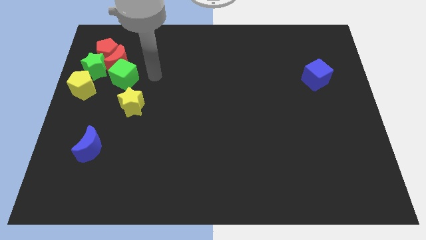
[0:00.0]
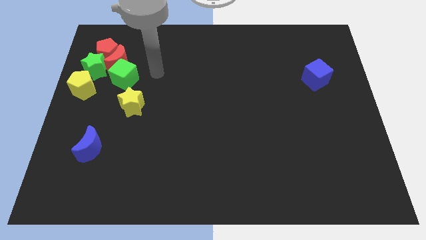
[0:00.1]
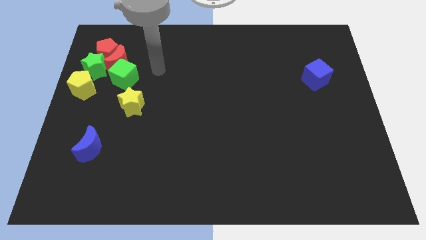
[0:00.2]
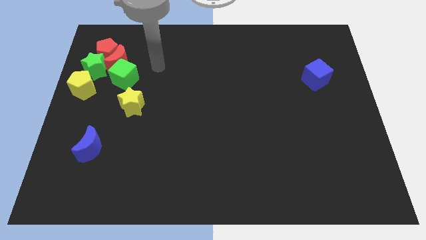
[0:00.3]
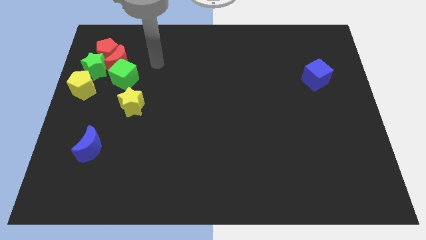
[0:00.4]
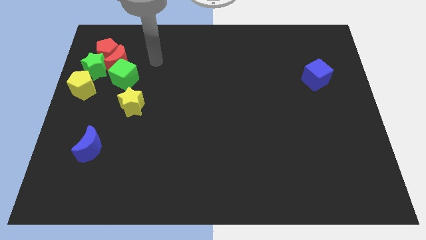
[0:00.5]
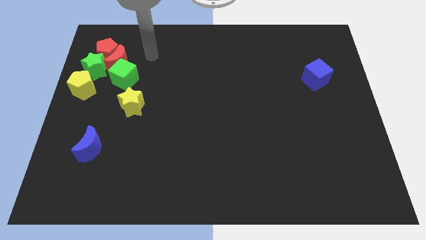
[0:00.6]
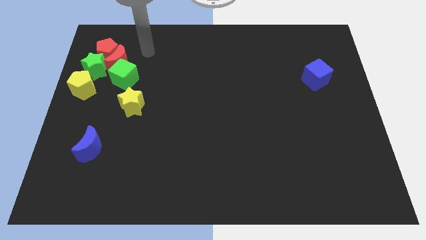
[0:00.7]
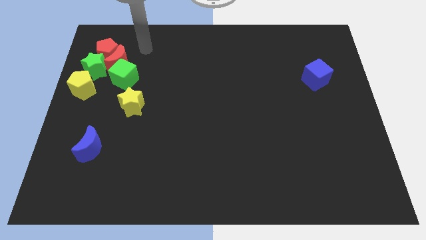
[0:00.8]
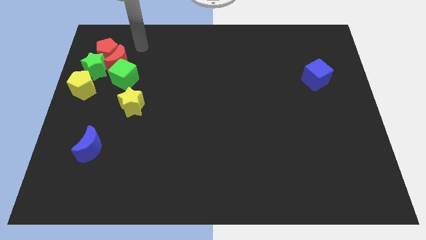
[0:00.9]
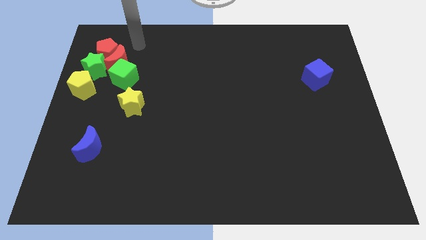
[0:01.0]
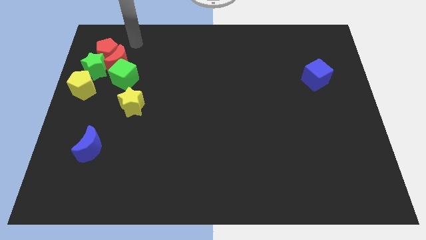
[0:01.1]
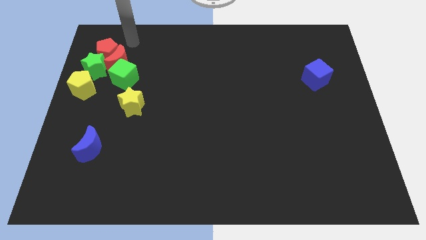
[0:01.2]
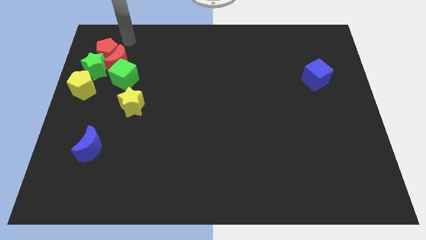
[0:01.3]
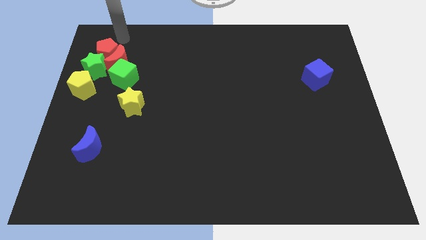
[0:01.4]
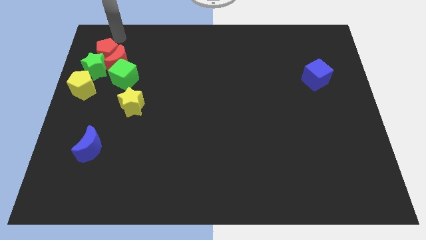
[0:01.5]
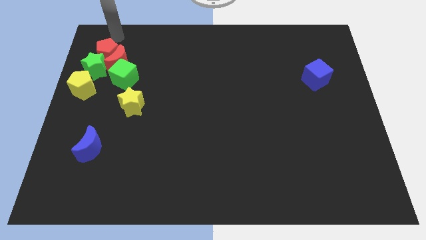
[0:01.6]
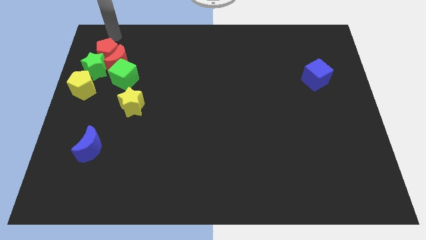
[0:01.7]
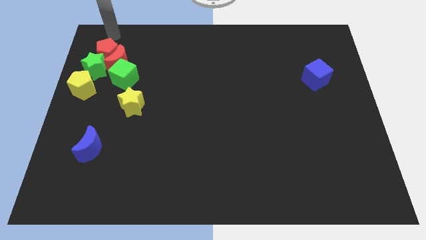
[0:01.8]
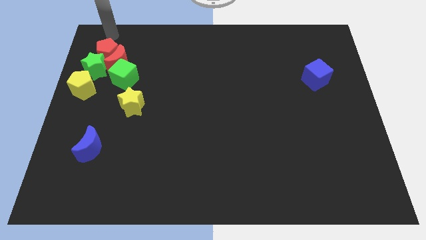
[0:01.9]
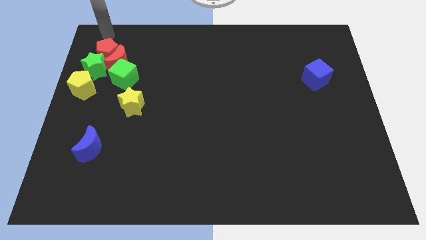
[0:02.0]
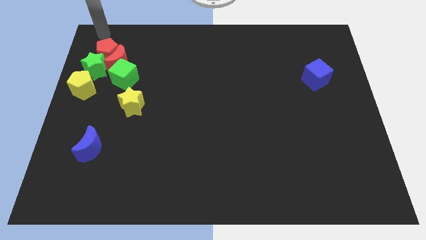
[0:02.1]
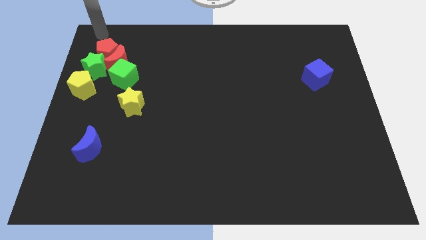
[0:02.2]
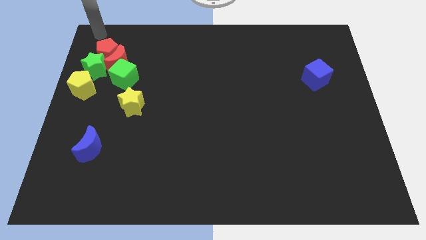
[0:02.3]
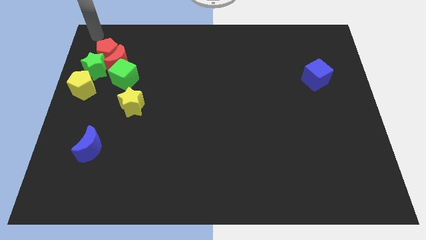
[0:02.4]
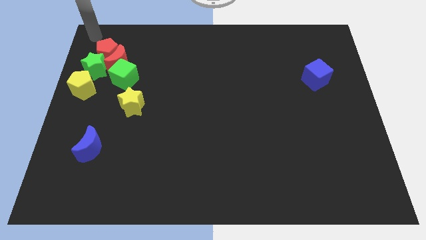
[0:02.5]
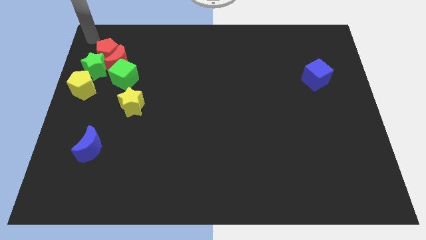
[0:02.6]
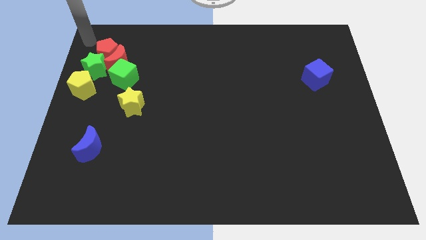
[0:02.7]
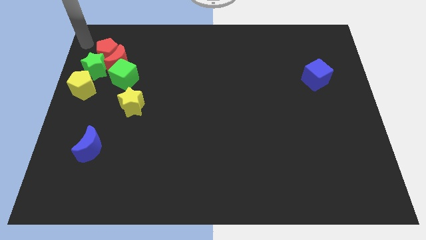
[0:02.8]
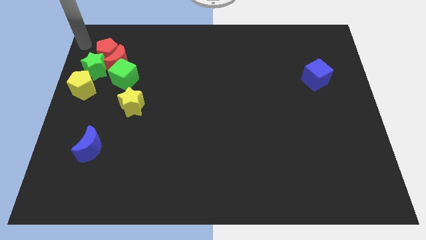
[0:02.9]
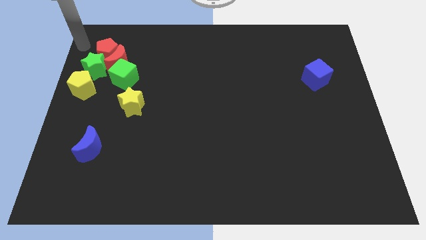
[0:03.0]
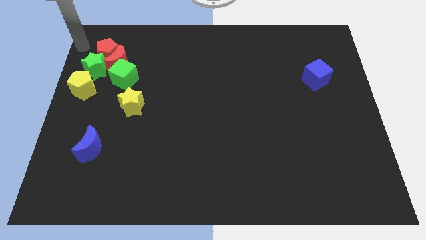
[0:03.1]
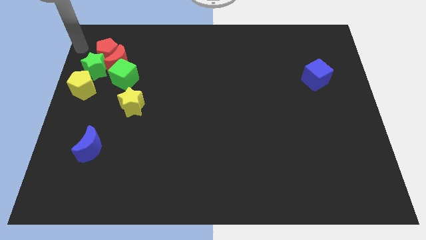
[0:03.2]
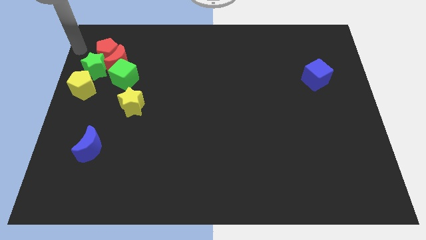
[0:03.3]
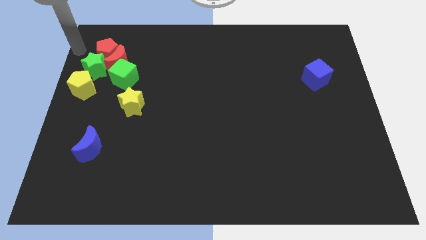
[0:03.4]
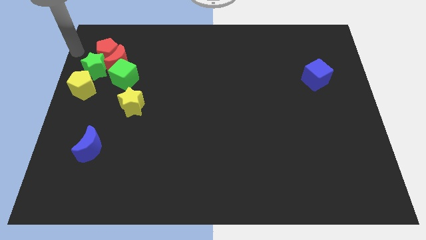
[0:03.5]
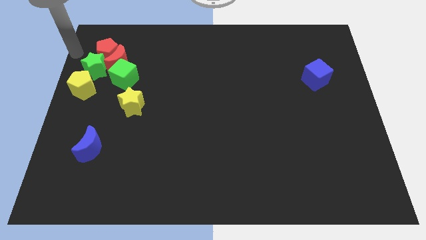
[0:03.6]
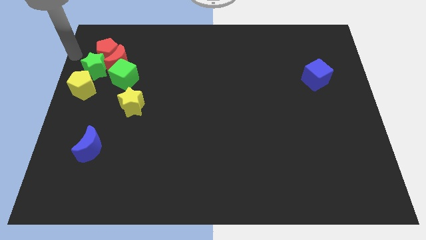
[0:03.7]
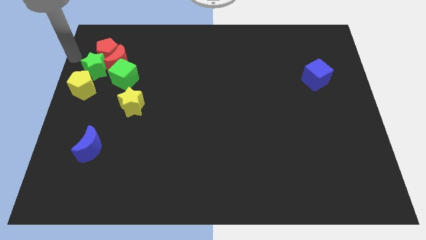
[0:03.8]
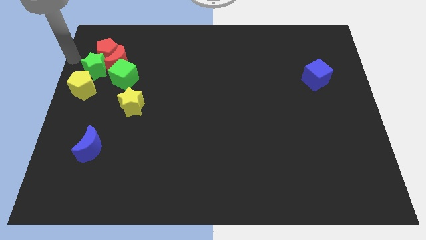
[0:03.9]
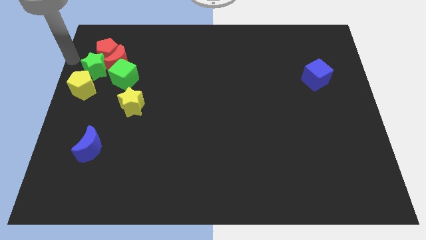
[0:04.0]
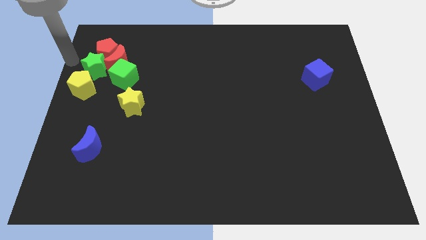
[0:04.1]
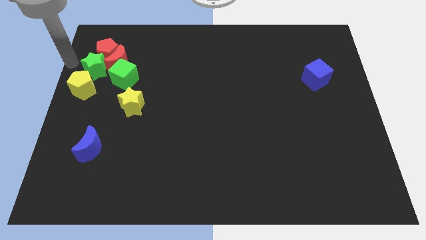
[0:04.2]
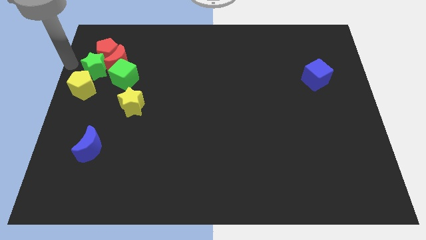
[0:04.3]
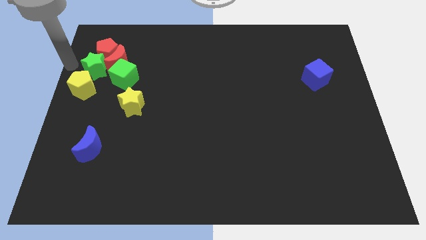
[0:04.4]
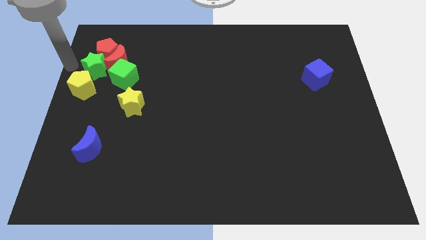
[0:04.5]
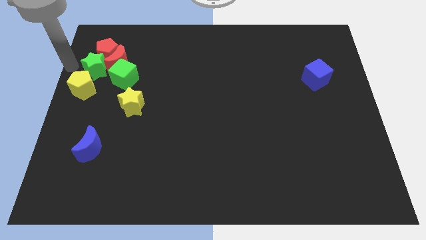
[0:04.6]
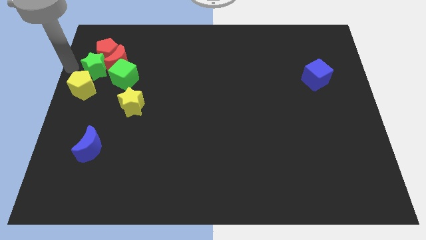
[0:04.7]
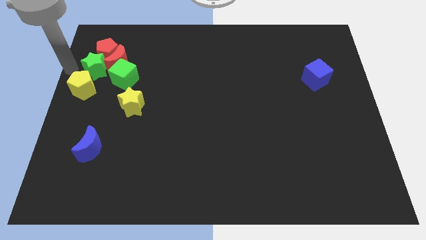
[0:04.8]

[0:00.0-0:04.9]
move the arm towards the yellow pentagon

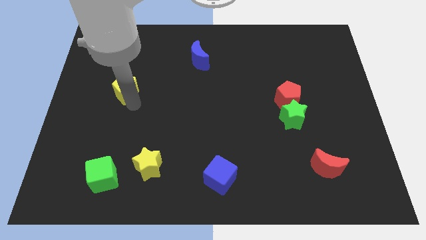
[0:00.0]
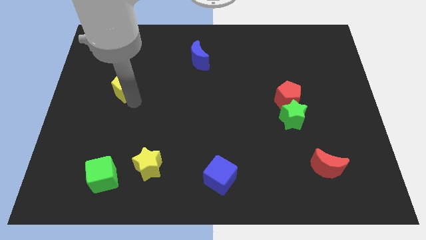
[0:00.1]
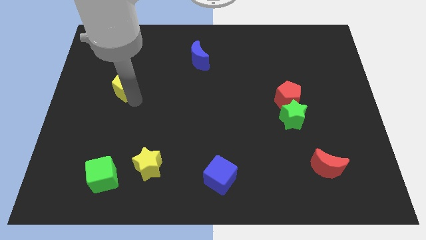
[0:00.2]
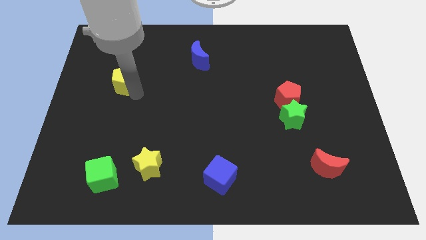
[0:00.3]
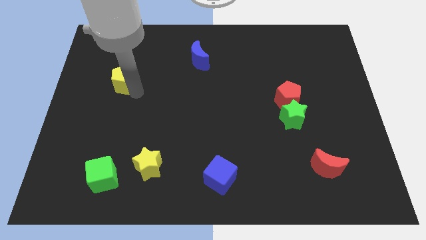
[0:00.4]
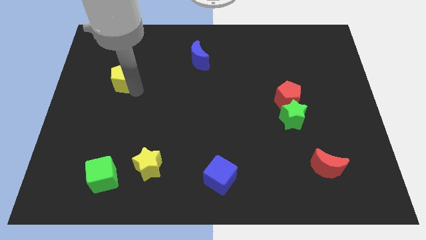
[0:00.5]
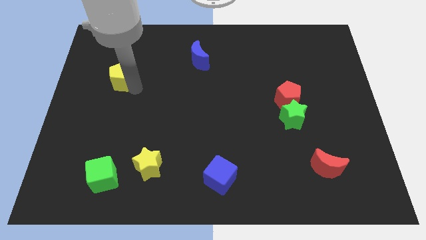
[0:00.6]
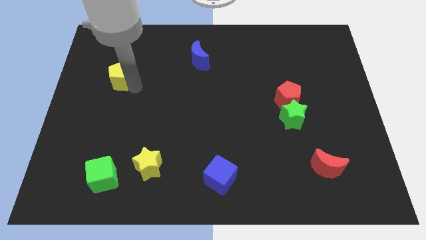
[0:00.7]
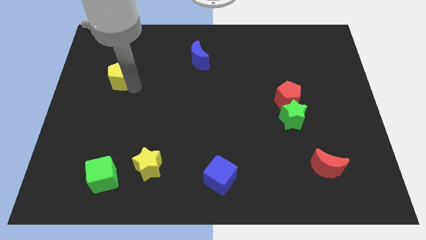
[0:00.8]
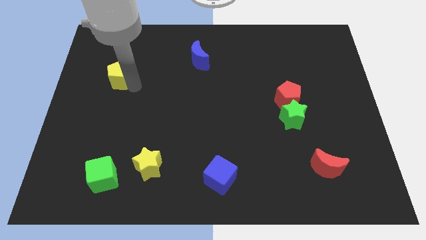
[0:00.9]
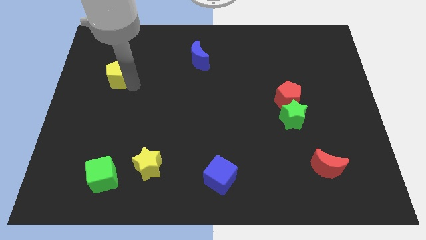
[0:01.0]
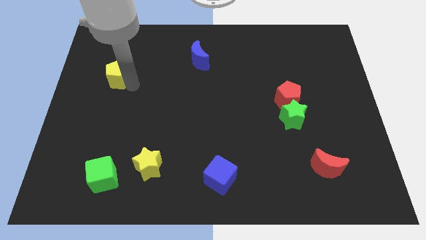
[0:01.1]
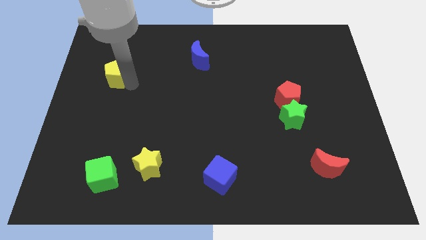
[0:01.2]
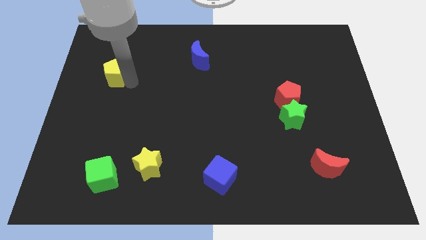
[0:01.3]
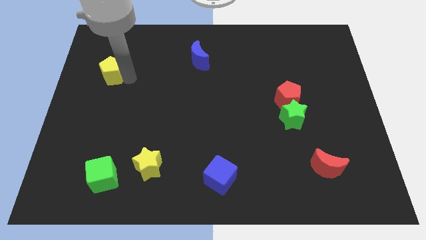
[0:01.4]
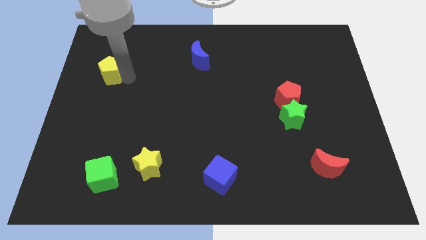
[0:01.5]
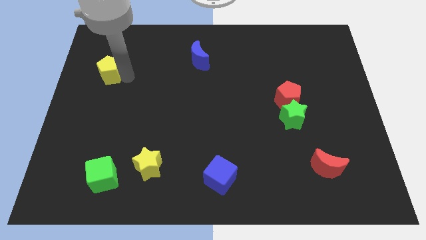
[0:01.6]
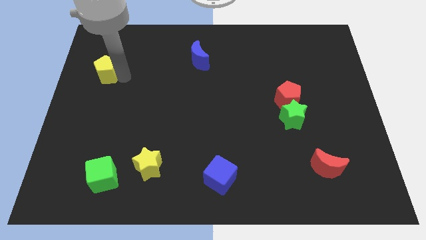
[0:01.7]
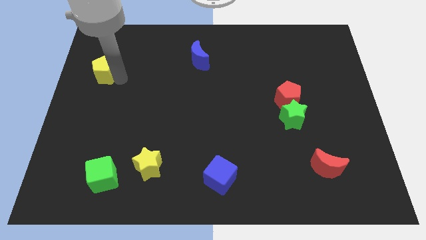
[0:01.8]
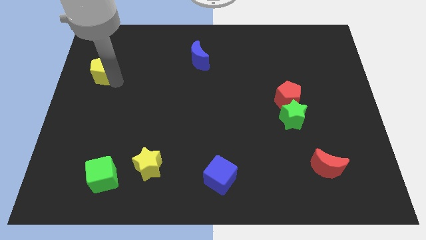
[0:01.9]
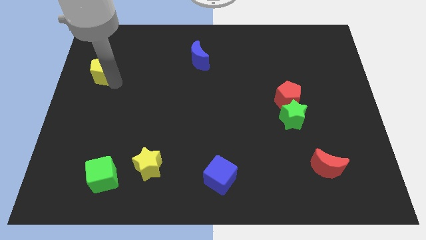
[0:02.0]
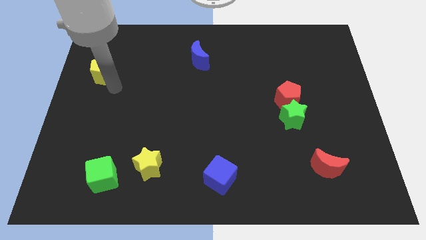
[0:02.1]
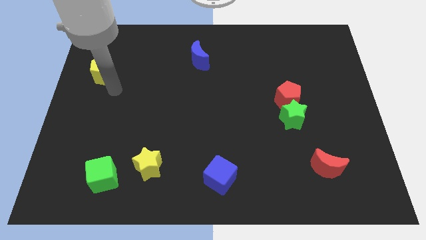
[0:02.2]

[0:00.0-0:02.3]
push yellow pentagon upwards

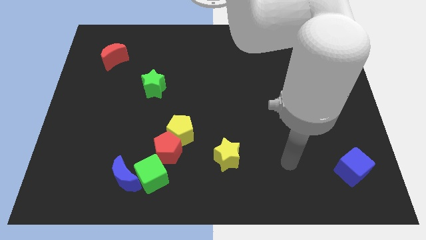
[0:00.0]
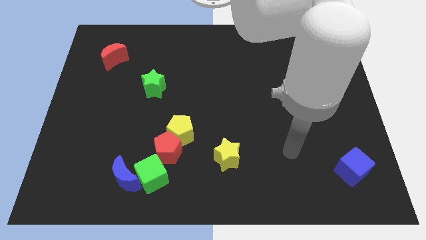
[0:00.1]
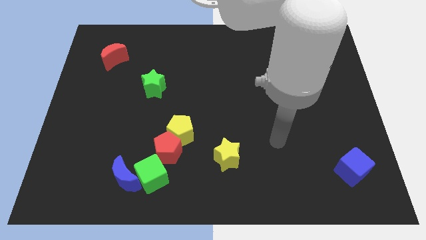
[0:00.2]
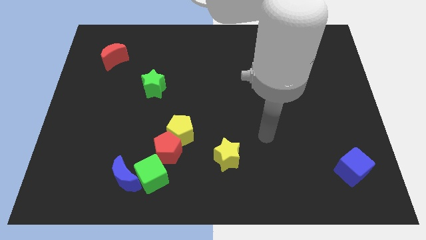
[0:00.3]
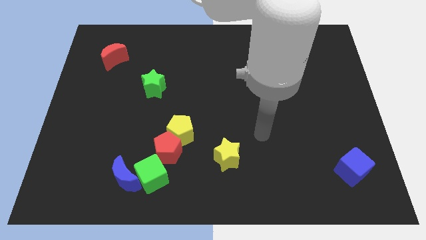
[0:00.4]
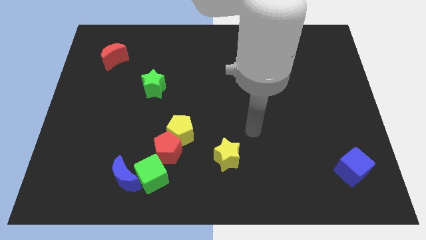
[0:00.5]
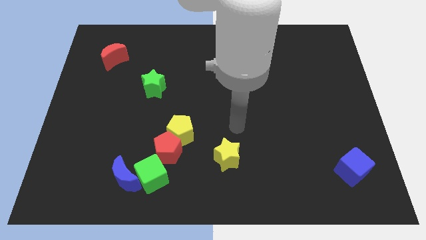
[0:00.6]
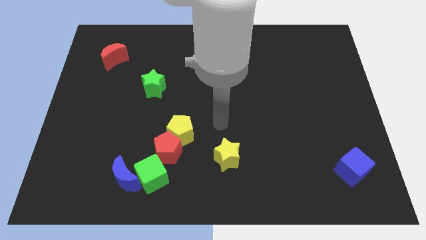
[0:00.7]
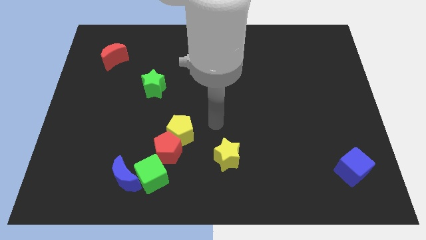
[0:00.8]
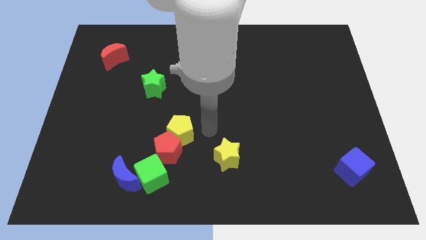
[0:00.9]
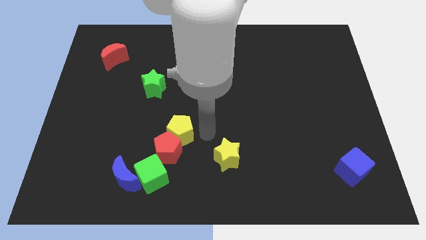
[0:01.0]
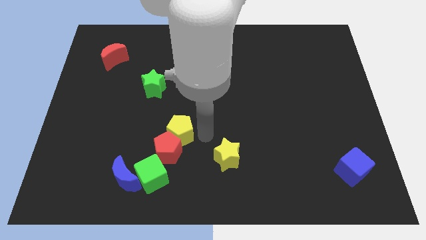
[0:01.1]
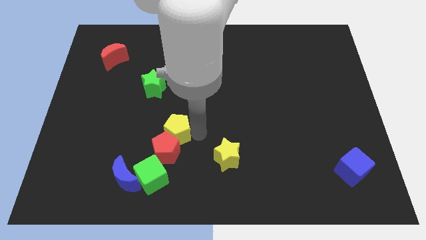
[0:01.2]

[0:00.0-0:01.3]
touch the yellow pentagon on the right side

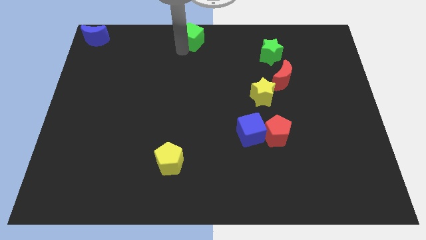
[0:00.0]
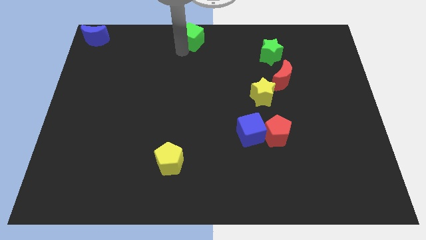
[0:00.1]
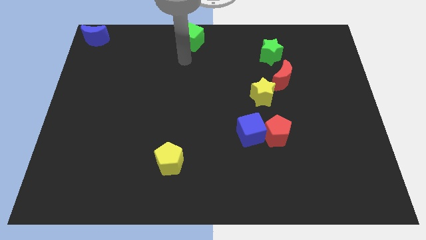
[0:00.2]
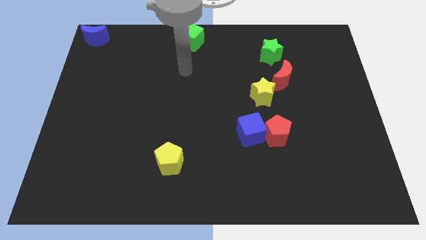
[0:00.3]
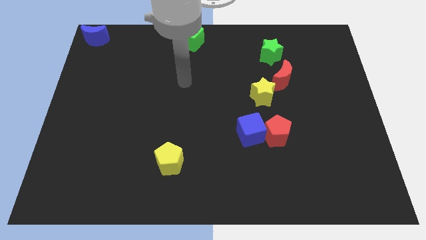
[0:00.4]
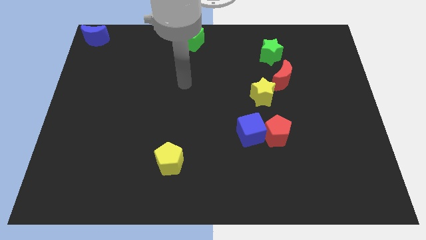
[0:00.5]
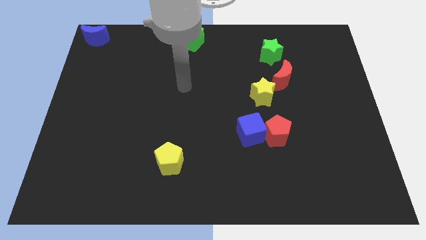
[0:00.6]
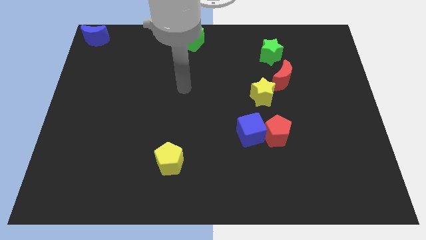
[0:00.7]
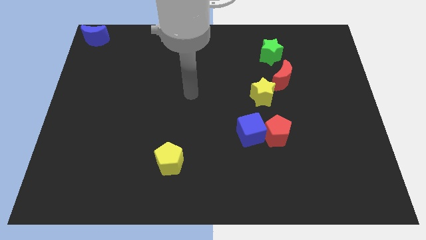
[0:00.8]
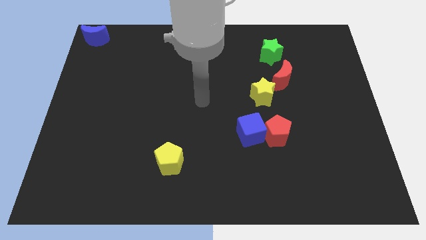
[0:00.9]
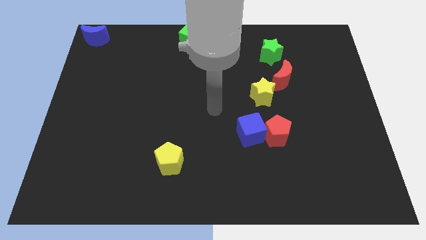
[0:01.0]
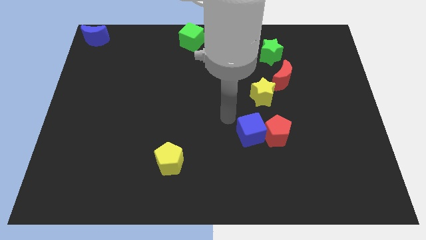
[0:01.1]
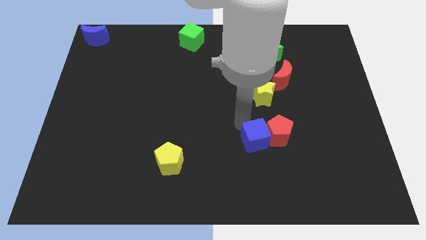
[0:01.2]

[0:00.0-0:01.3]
place your arm to the top of blue cube
